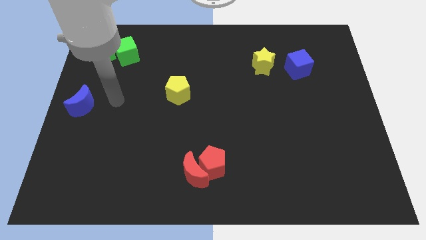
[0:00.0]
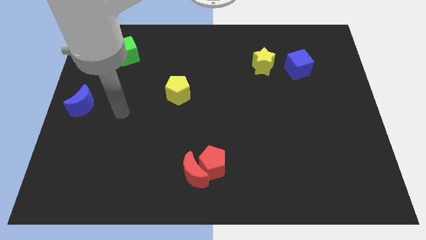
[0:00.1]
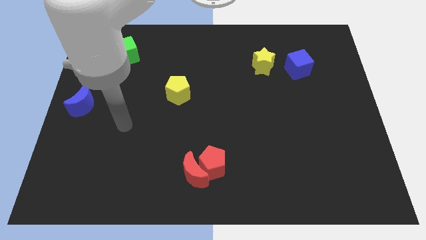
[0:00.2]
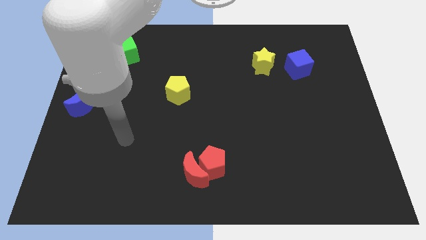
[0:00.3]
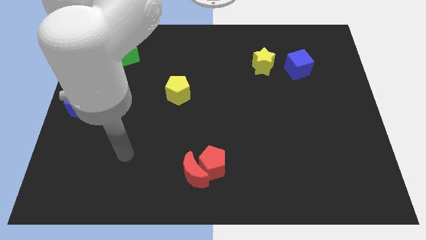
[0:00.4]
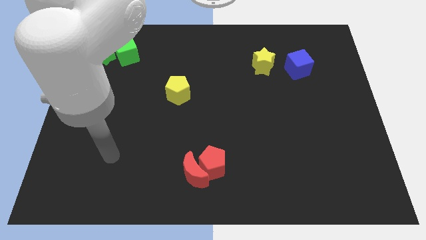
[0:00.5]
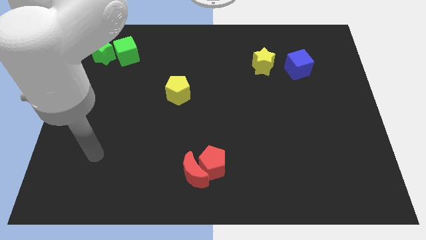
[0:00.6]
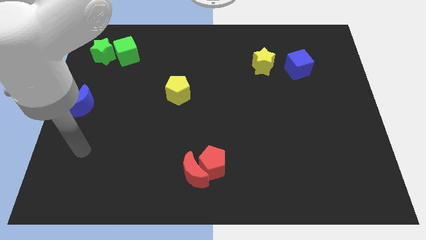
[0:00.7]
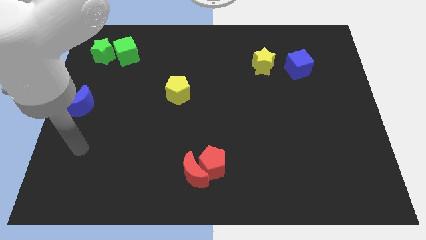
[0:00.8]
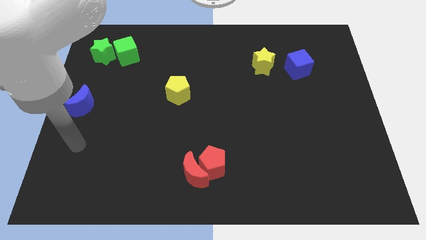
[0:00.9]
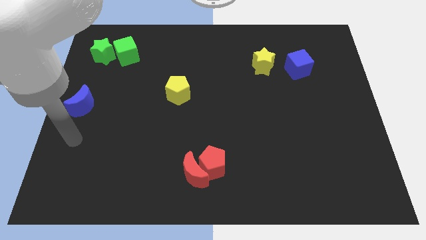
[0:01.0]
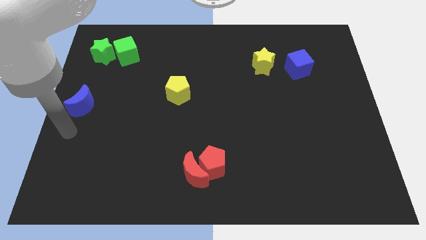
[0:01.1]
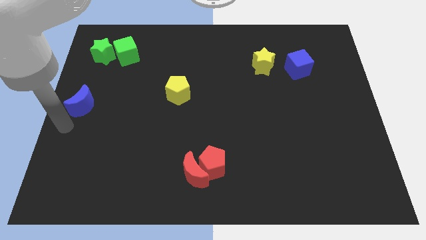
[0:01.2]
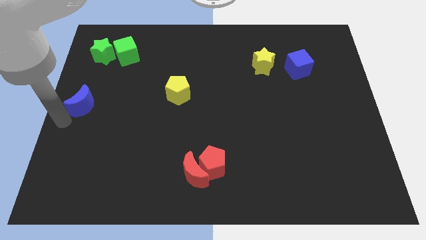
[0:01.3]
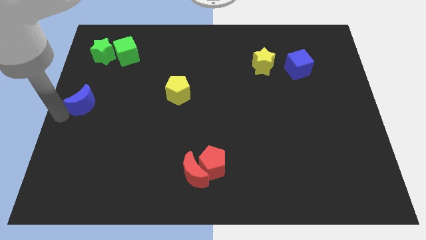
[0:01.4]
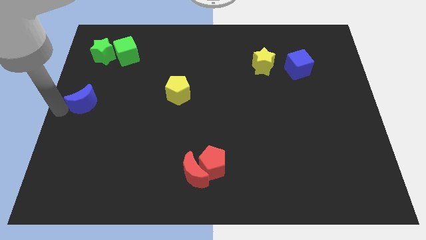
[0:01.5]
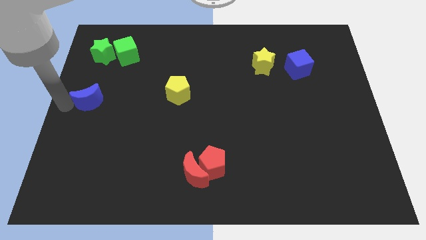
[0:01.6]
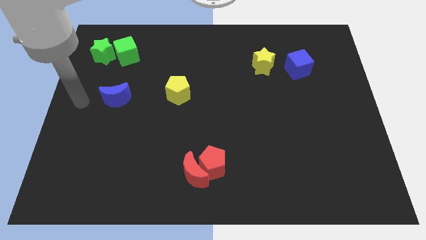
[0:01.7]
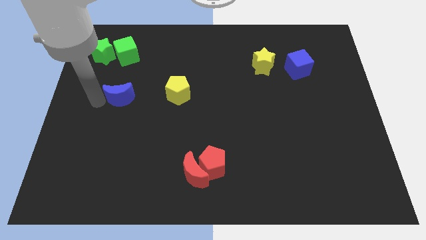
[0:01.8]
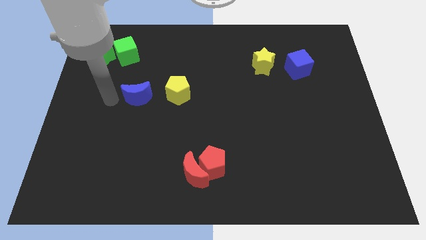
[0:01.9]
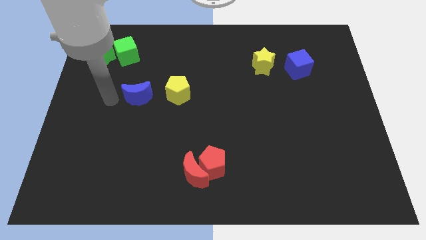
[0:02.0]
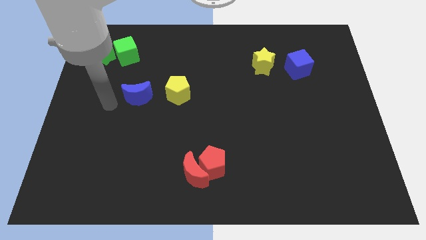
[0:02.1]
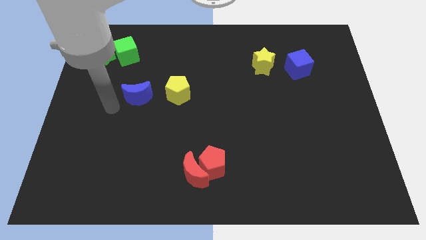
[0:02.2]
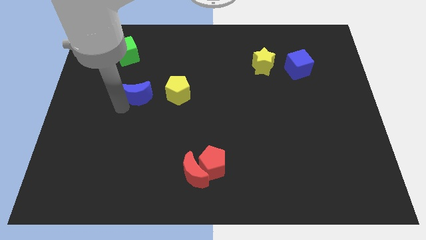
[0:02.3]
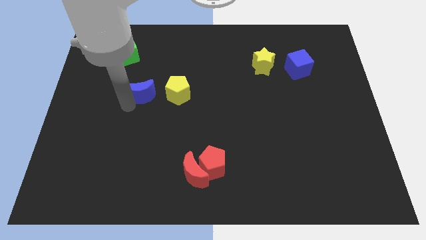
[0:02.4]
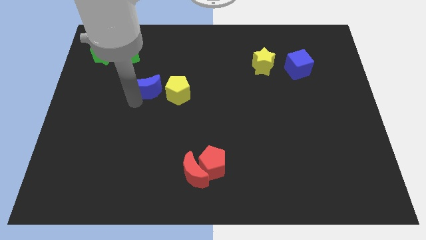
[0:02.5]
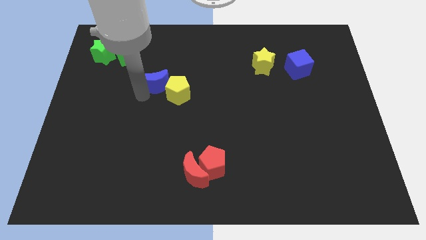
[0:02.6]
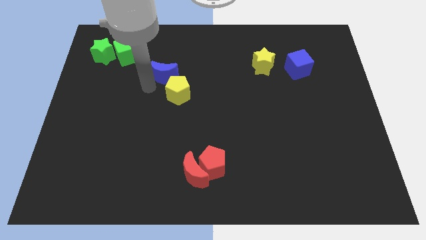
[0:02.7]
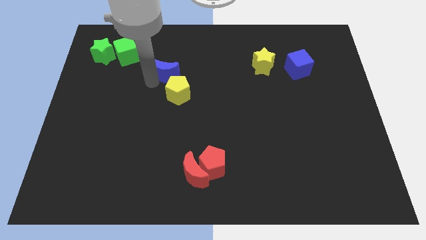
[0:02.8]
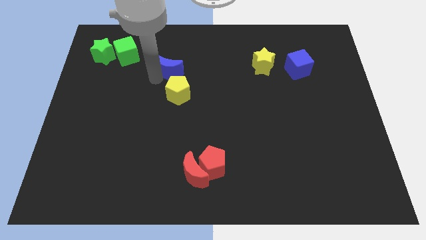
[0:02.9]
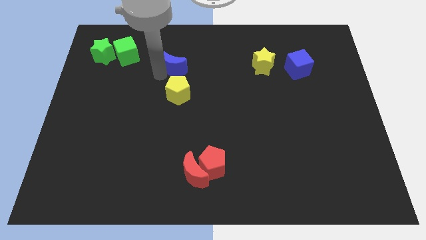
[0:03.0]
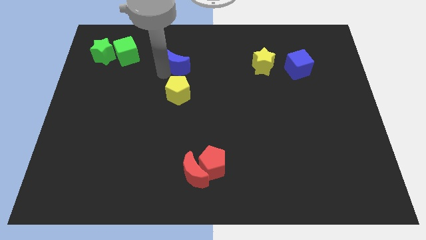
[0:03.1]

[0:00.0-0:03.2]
place the blue moon above the yellow pentagon

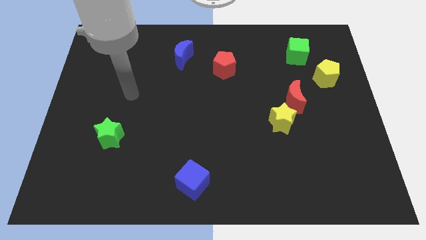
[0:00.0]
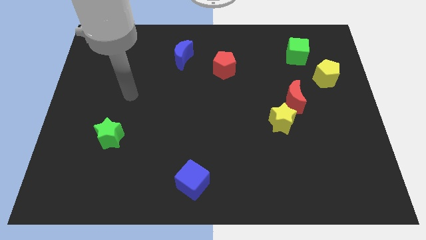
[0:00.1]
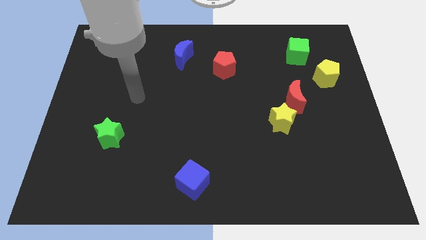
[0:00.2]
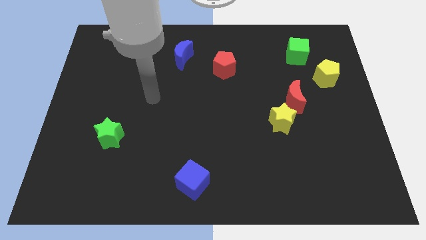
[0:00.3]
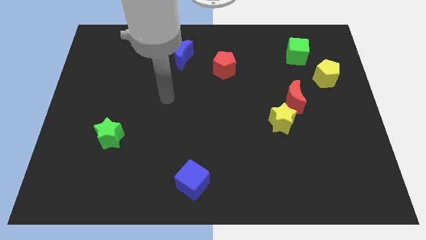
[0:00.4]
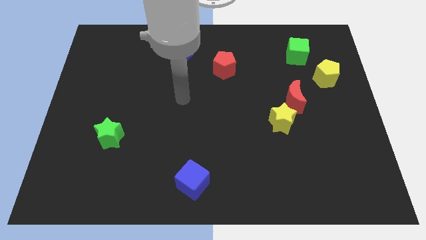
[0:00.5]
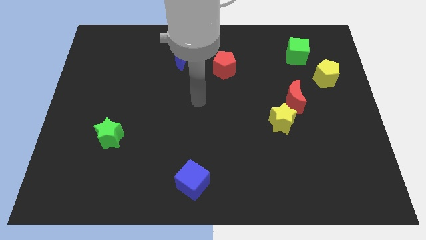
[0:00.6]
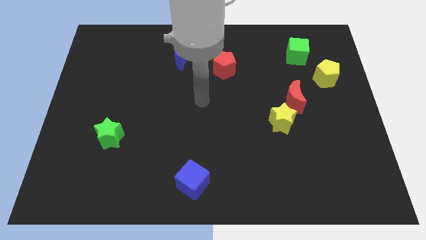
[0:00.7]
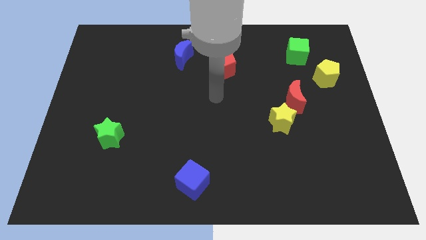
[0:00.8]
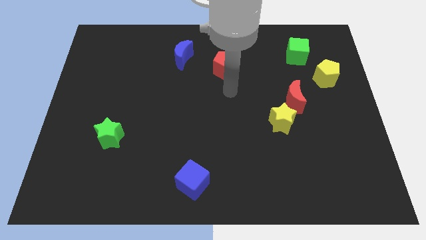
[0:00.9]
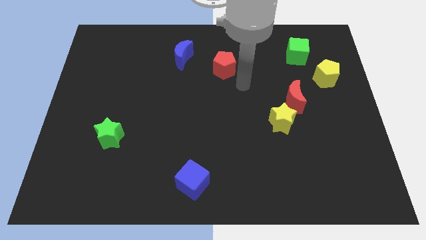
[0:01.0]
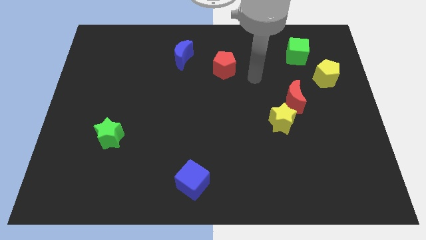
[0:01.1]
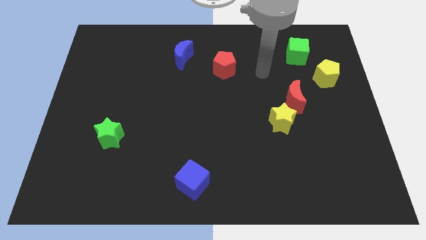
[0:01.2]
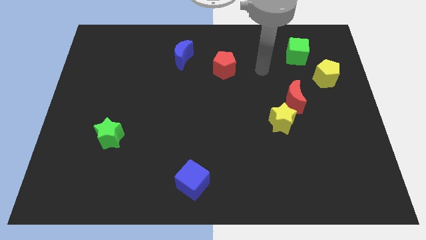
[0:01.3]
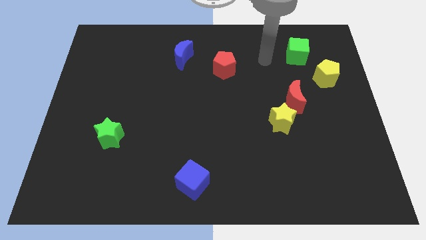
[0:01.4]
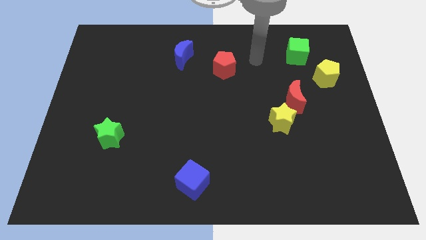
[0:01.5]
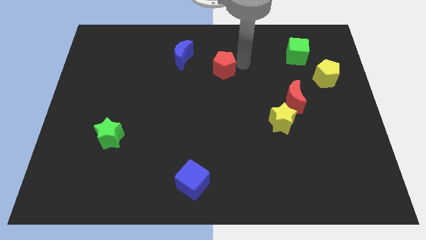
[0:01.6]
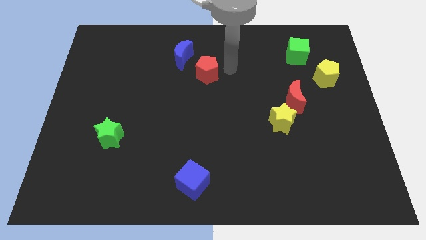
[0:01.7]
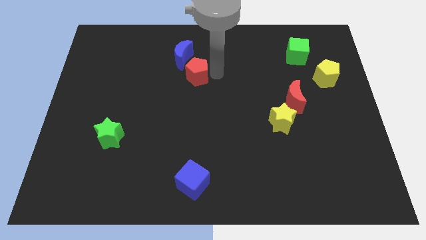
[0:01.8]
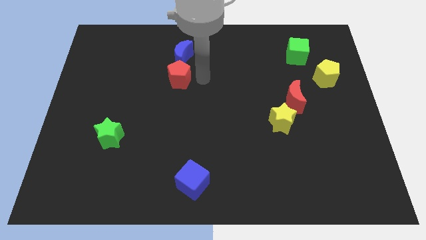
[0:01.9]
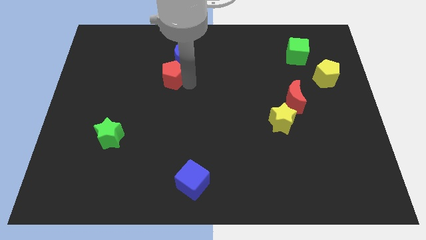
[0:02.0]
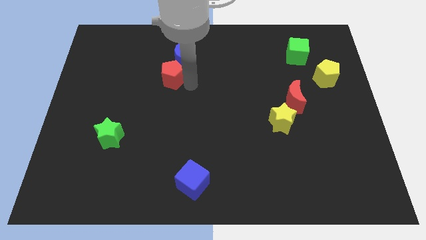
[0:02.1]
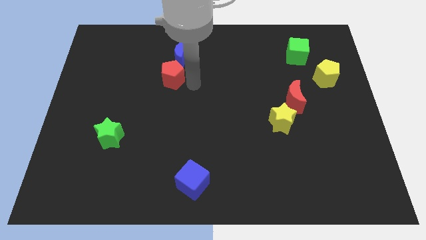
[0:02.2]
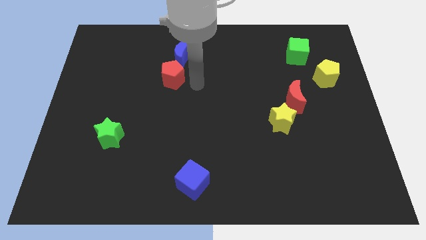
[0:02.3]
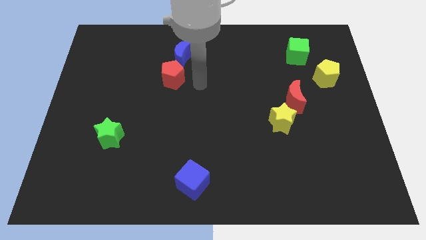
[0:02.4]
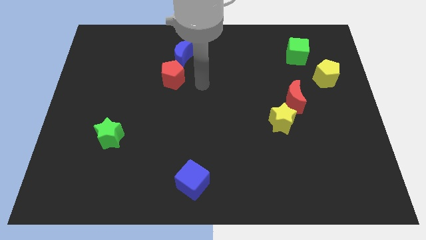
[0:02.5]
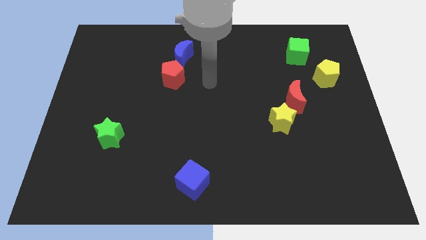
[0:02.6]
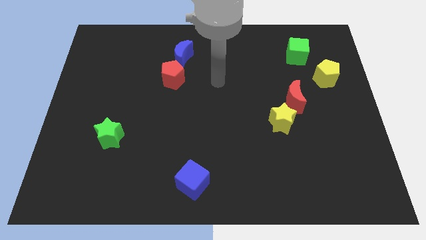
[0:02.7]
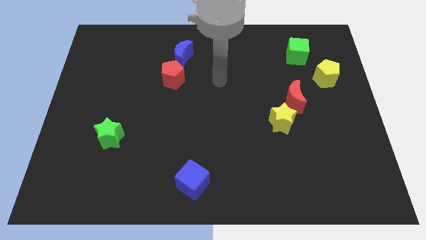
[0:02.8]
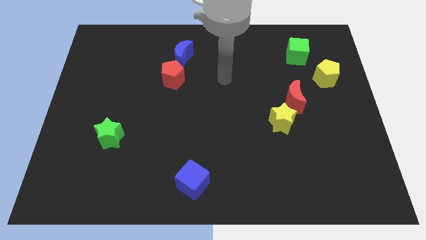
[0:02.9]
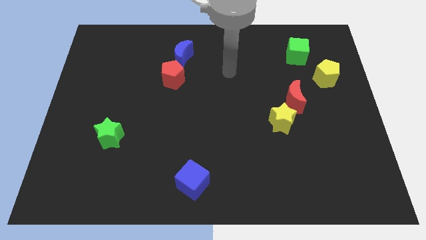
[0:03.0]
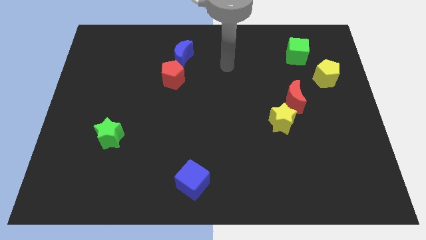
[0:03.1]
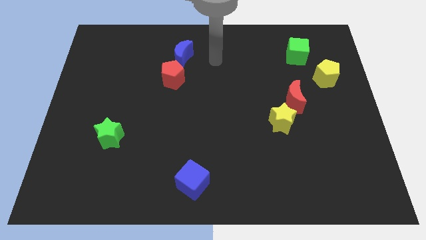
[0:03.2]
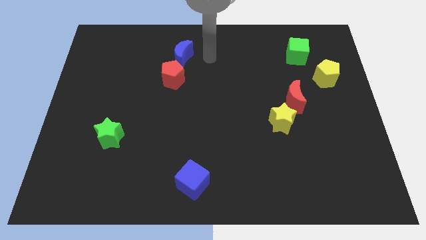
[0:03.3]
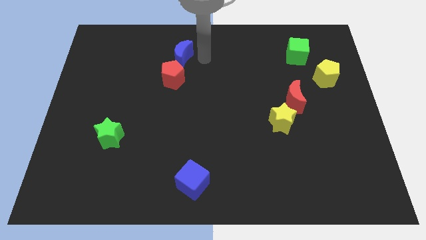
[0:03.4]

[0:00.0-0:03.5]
place the red pentagon below the blue crescent

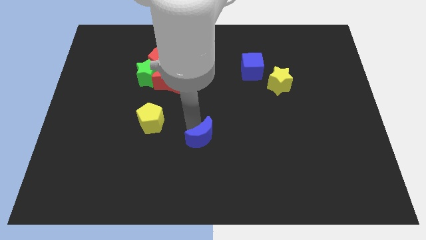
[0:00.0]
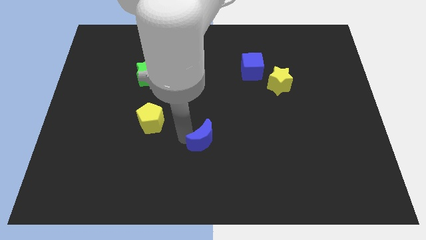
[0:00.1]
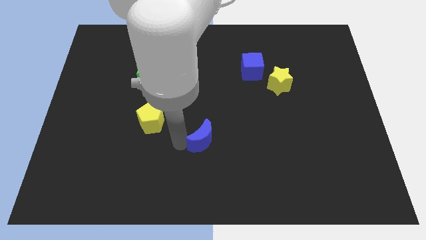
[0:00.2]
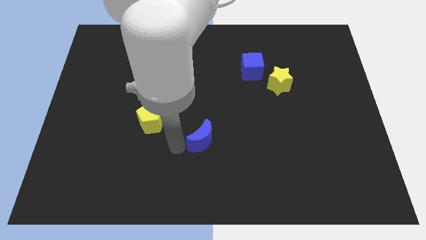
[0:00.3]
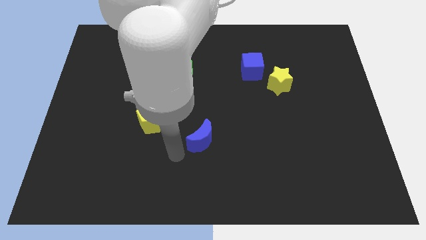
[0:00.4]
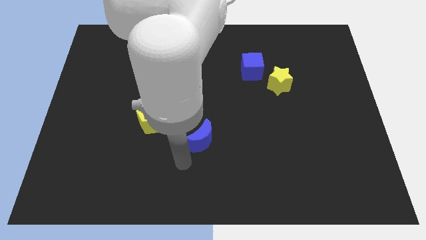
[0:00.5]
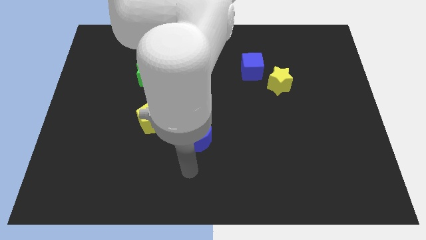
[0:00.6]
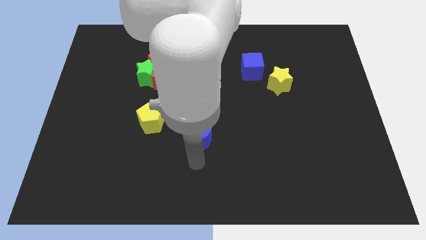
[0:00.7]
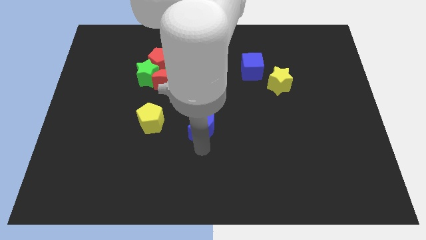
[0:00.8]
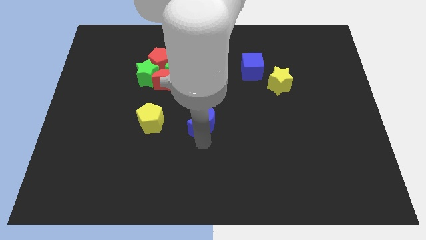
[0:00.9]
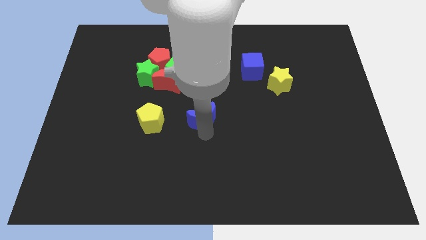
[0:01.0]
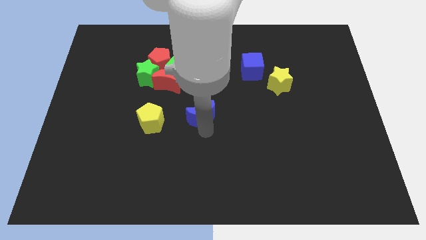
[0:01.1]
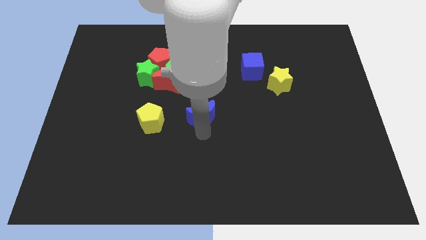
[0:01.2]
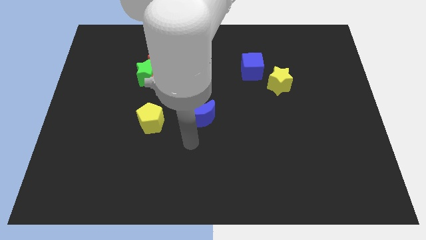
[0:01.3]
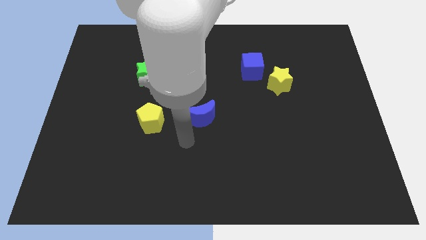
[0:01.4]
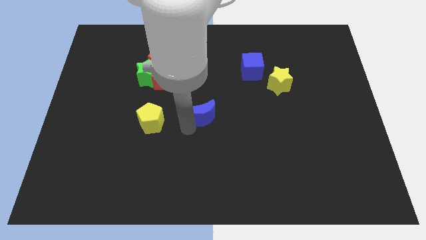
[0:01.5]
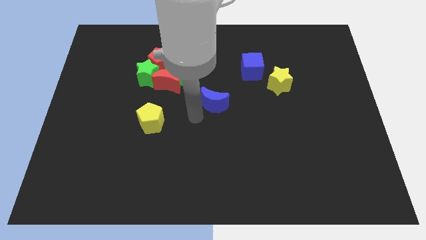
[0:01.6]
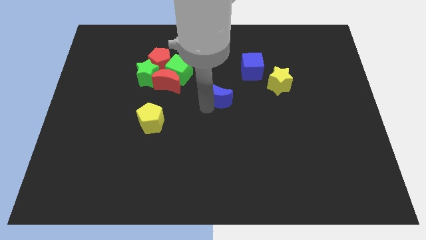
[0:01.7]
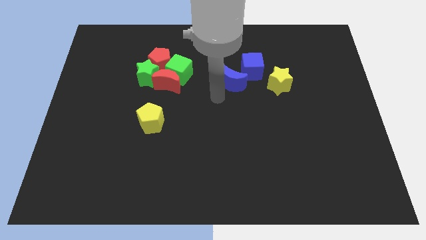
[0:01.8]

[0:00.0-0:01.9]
move the blue moon towards the blue cube

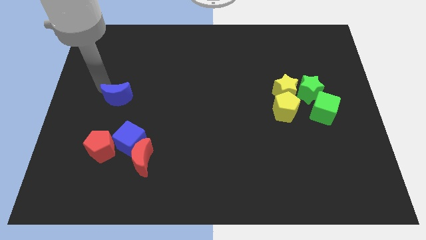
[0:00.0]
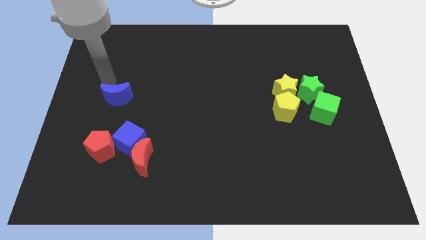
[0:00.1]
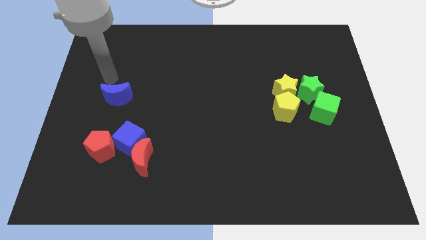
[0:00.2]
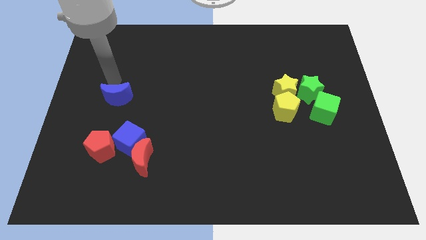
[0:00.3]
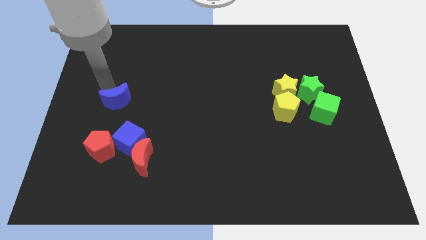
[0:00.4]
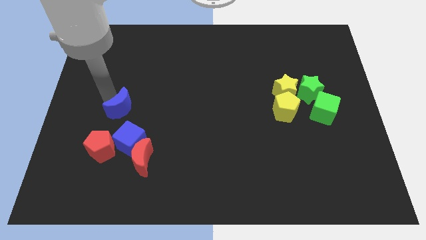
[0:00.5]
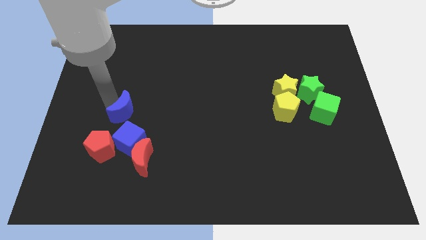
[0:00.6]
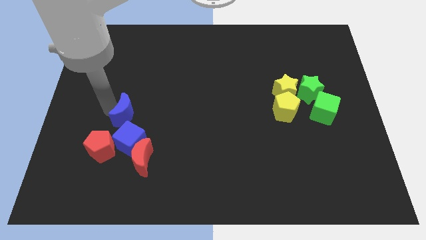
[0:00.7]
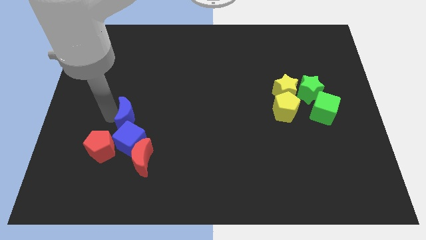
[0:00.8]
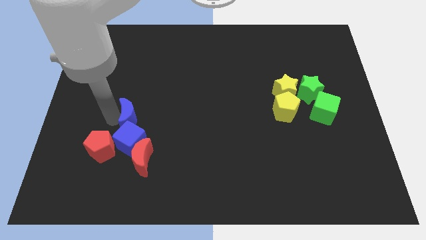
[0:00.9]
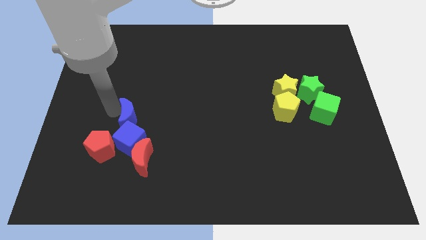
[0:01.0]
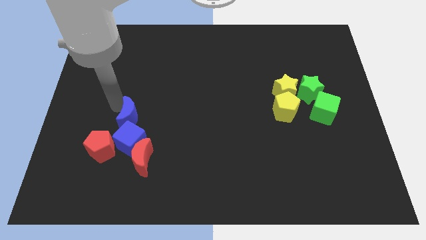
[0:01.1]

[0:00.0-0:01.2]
slide the blue moon into the blue cube
